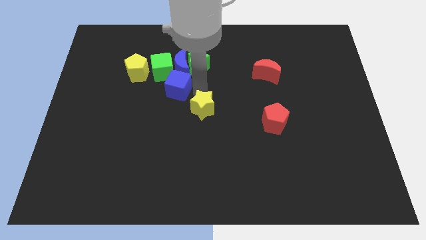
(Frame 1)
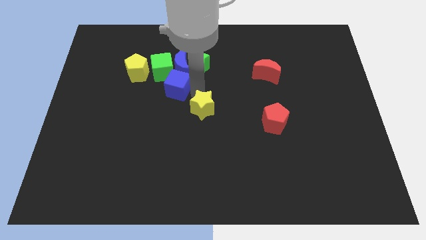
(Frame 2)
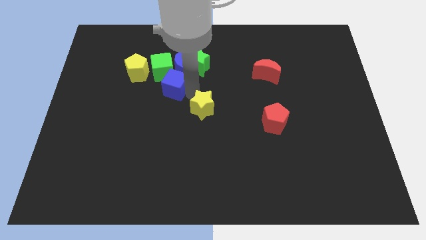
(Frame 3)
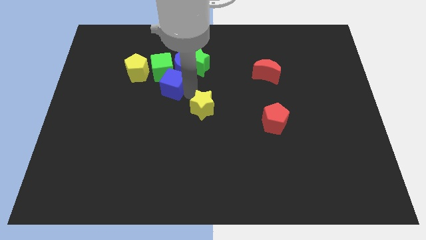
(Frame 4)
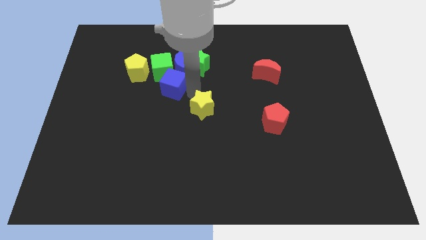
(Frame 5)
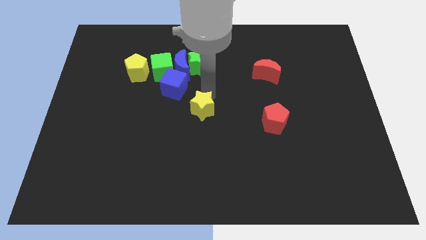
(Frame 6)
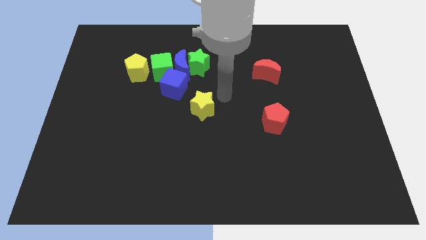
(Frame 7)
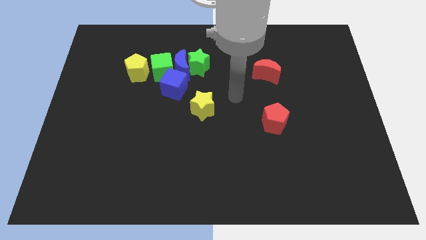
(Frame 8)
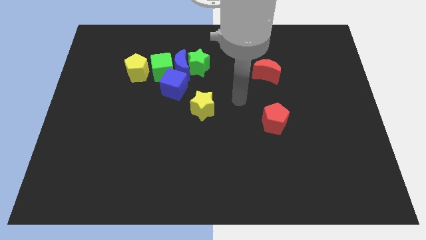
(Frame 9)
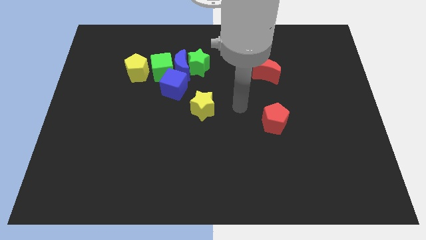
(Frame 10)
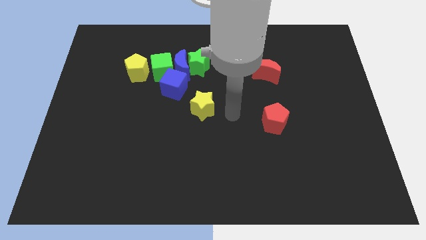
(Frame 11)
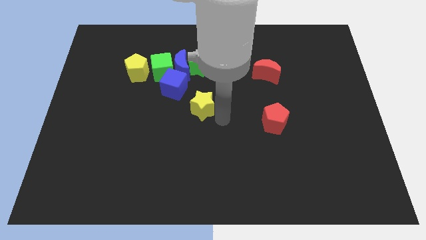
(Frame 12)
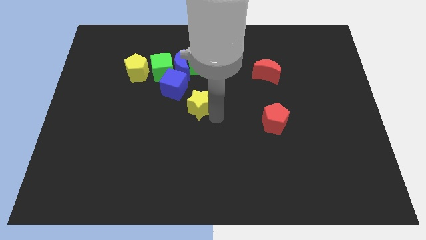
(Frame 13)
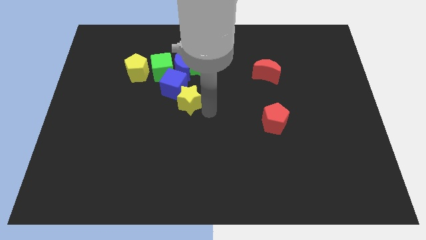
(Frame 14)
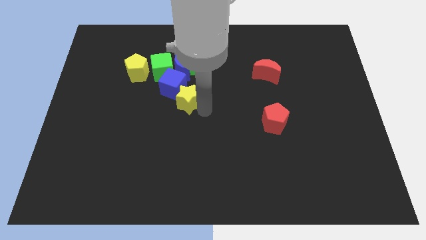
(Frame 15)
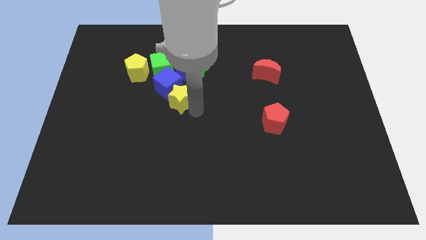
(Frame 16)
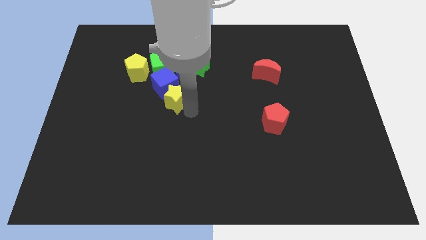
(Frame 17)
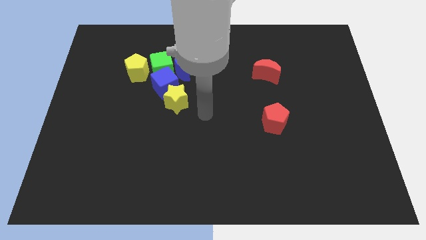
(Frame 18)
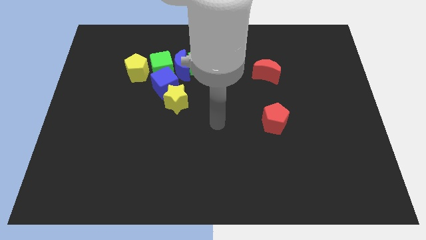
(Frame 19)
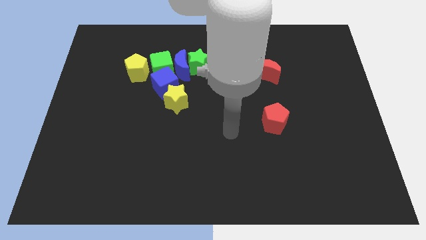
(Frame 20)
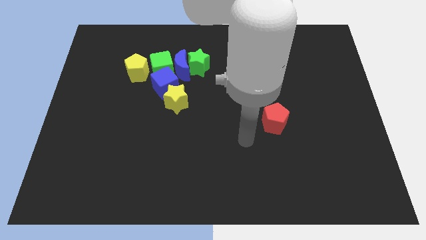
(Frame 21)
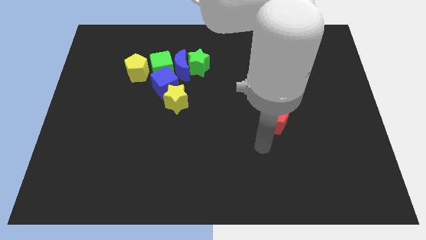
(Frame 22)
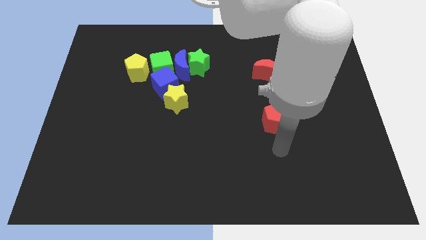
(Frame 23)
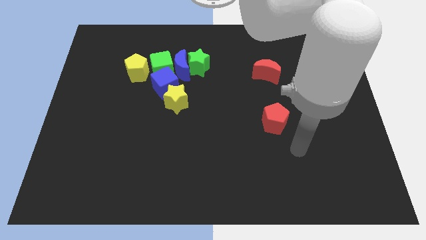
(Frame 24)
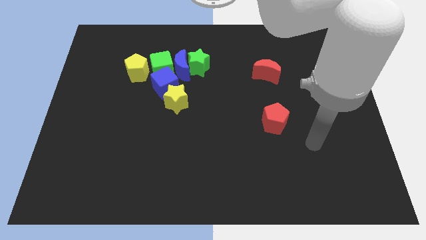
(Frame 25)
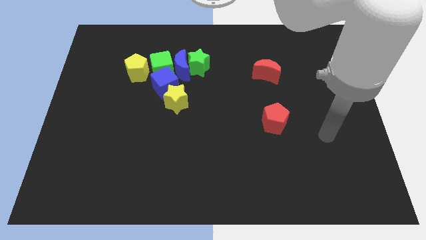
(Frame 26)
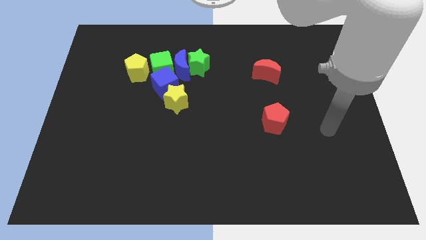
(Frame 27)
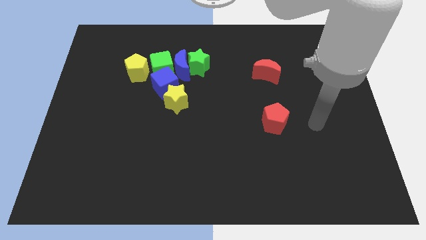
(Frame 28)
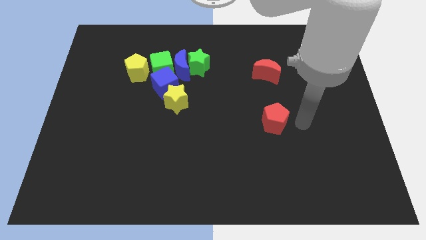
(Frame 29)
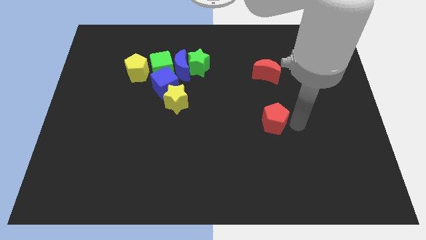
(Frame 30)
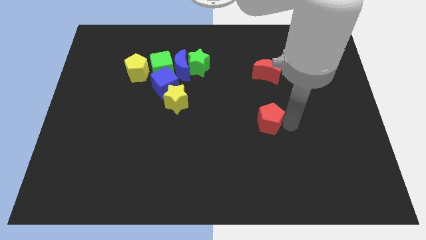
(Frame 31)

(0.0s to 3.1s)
move the arm towards the red pentagon

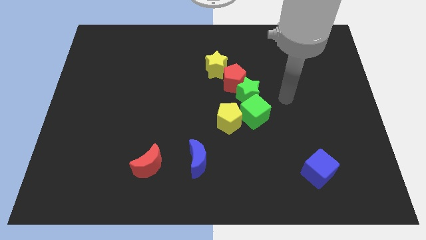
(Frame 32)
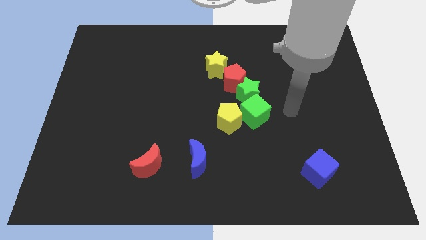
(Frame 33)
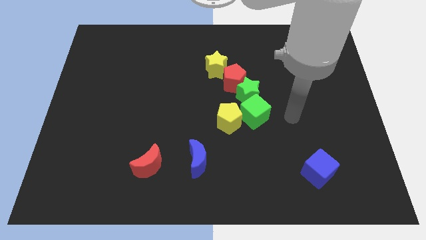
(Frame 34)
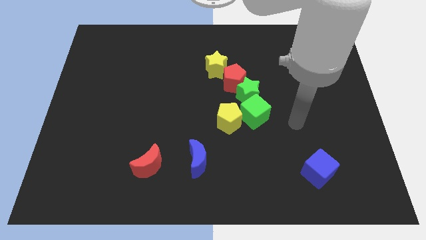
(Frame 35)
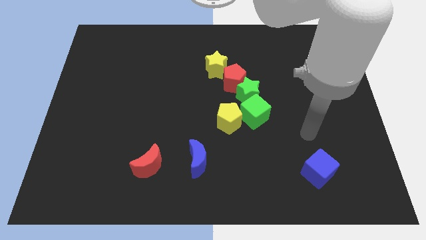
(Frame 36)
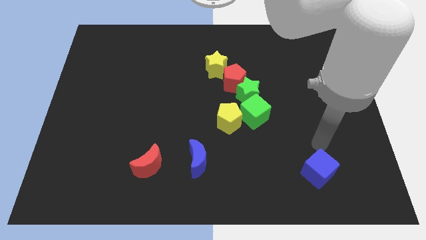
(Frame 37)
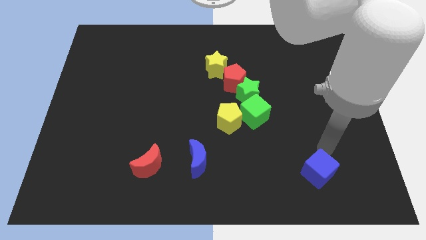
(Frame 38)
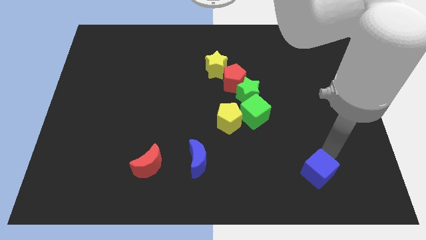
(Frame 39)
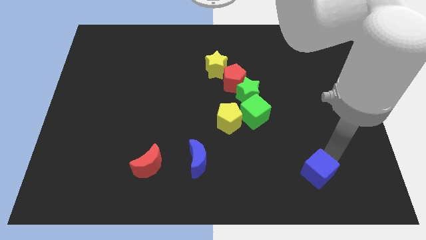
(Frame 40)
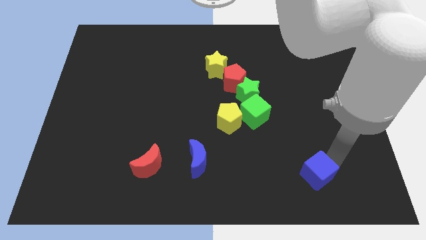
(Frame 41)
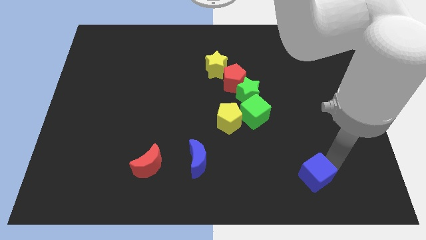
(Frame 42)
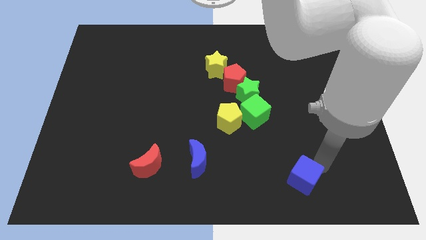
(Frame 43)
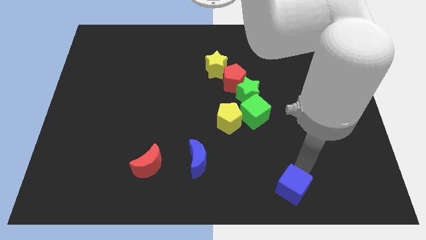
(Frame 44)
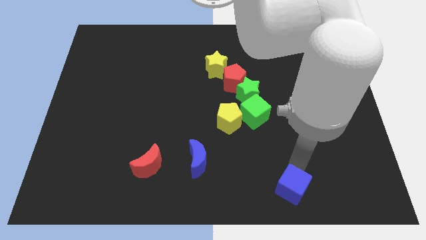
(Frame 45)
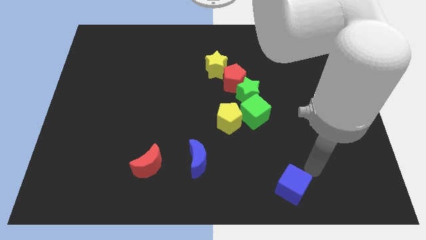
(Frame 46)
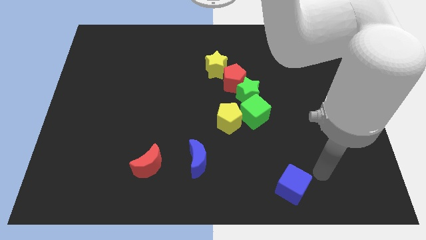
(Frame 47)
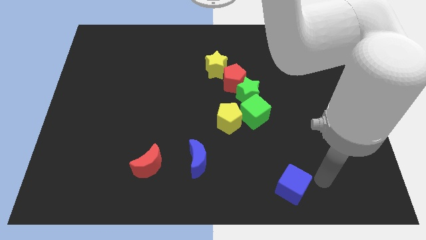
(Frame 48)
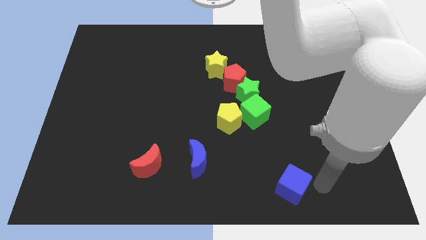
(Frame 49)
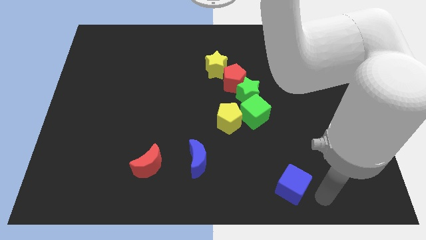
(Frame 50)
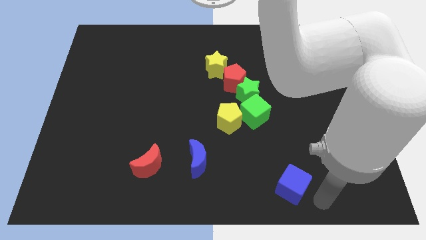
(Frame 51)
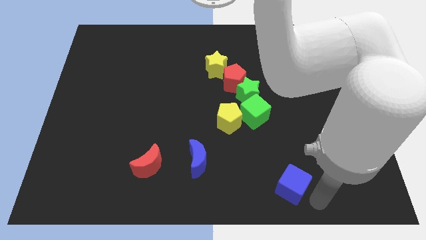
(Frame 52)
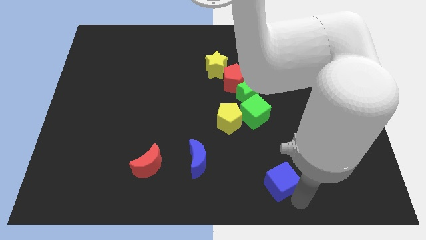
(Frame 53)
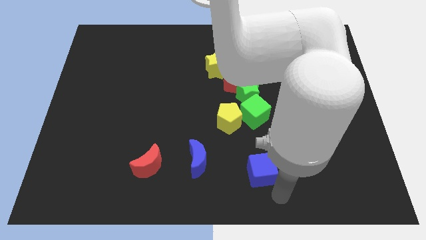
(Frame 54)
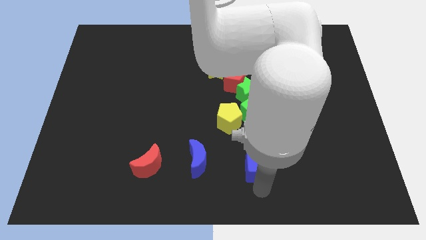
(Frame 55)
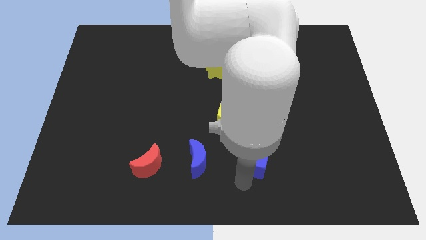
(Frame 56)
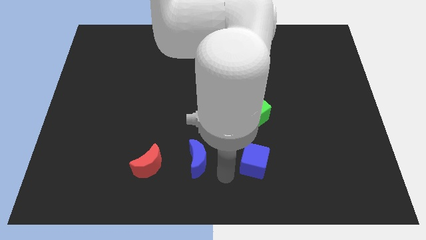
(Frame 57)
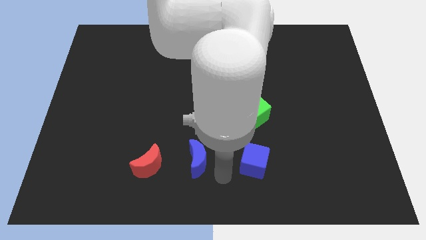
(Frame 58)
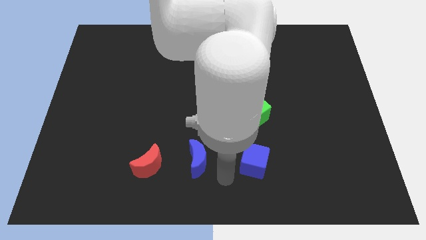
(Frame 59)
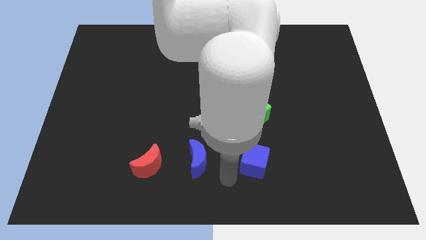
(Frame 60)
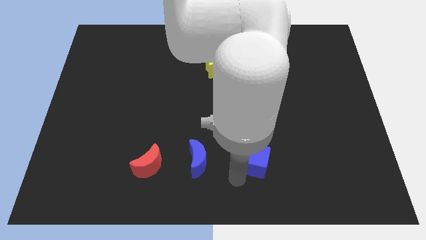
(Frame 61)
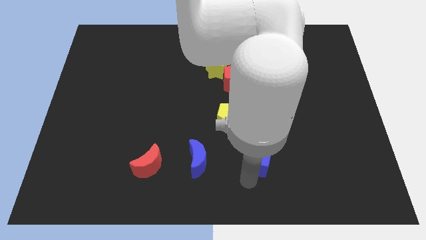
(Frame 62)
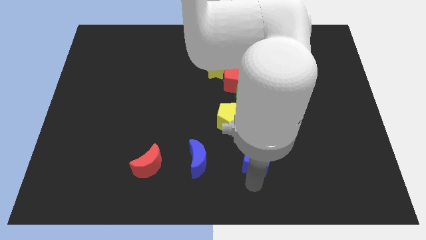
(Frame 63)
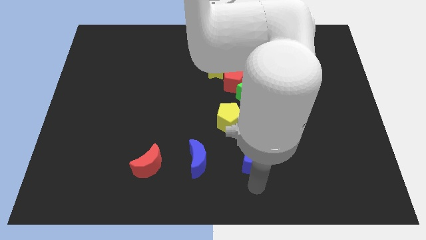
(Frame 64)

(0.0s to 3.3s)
move blue cube towards blue crescent

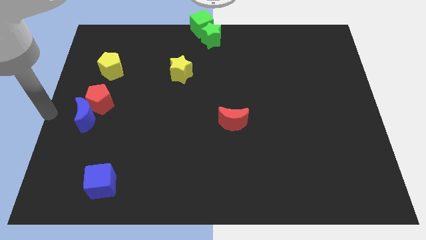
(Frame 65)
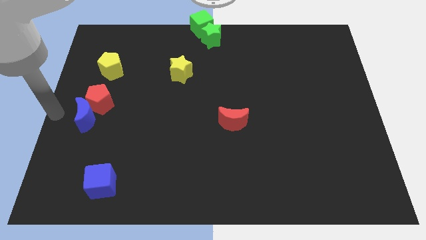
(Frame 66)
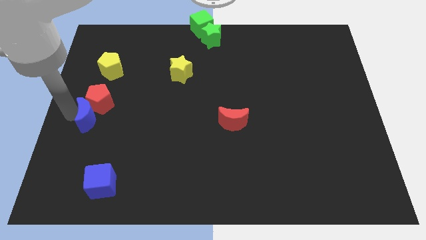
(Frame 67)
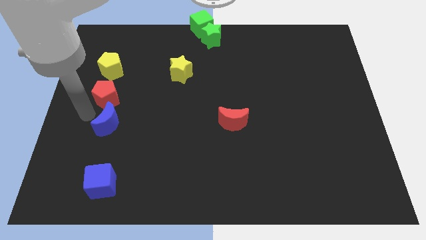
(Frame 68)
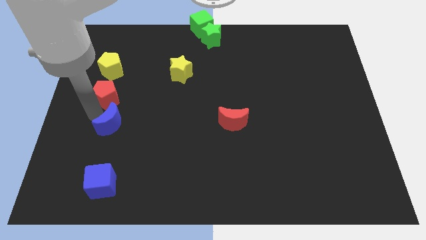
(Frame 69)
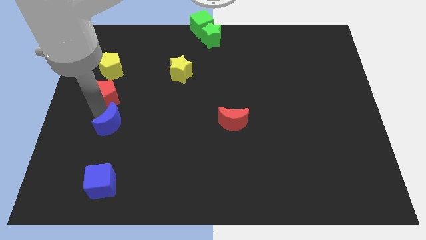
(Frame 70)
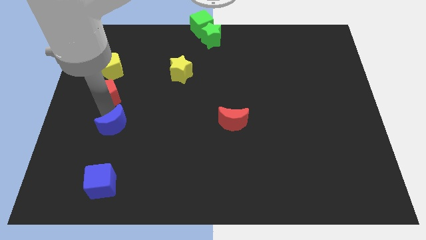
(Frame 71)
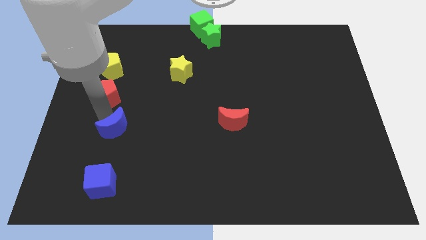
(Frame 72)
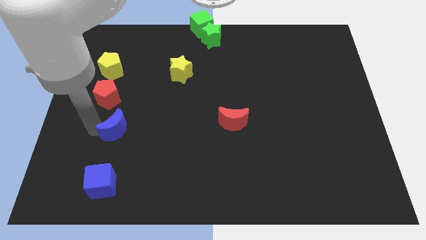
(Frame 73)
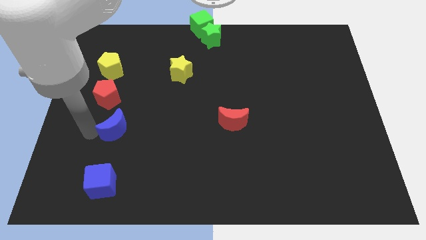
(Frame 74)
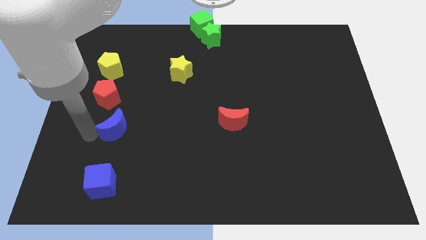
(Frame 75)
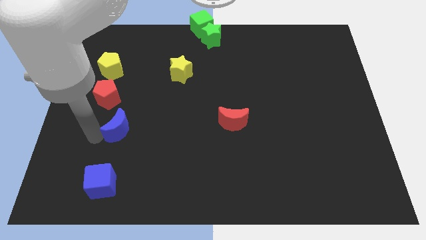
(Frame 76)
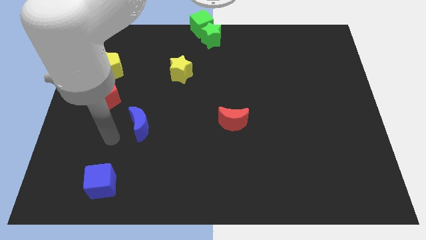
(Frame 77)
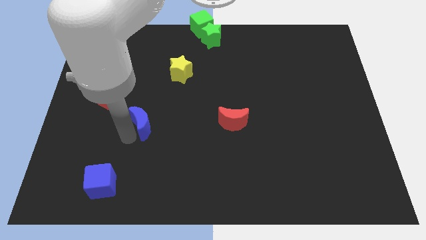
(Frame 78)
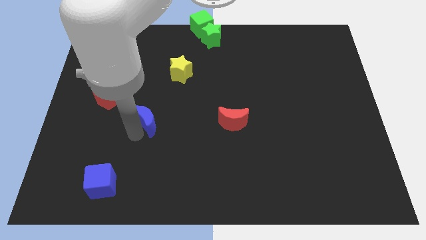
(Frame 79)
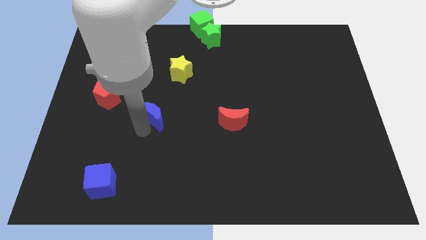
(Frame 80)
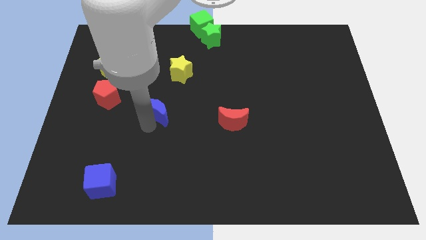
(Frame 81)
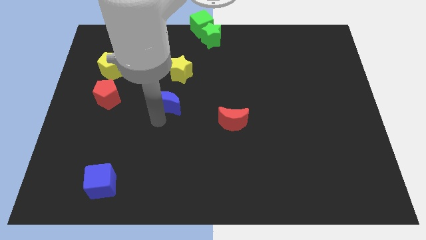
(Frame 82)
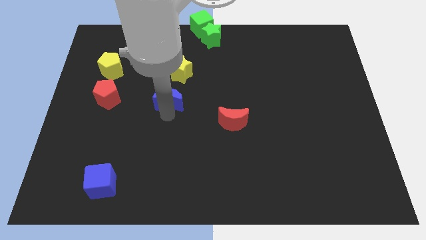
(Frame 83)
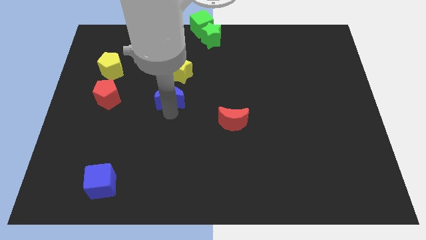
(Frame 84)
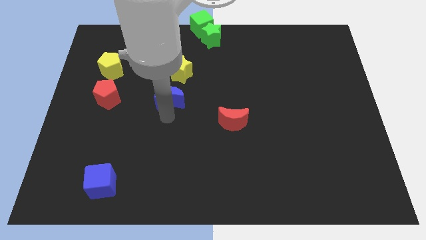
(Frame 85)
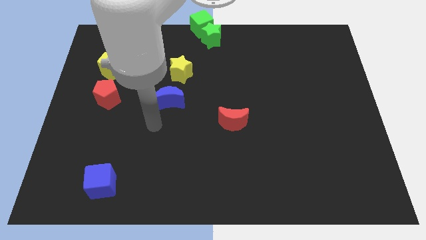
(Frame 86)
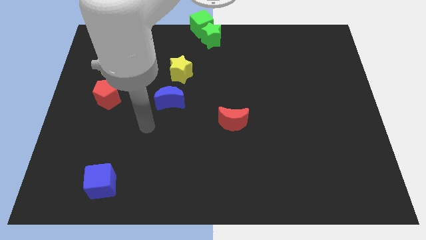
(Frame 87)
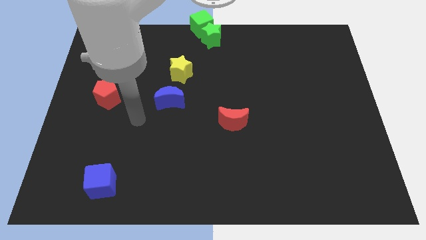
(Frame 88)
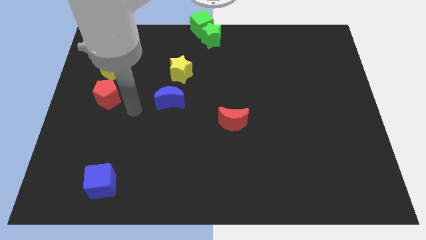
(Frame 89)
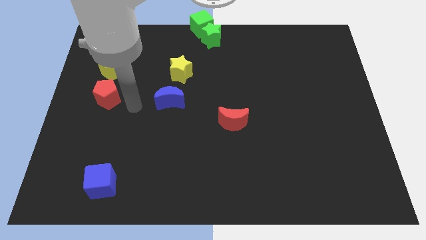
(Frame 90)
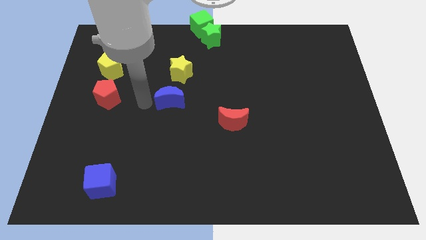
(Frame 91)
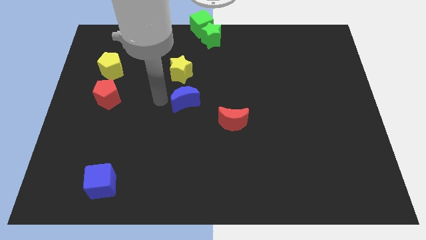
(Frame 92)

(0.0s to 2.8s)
place the blue moon to the right of the red pentagon
